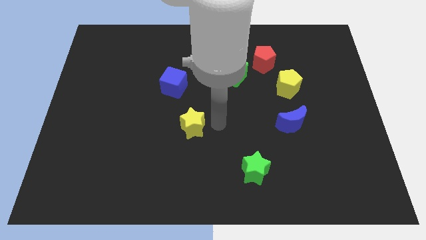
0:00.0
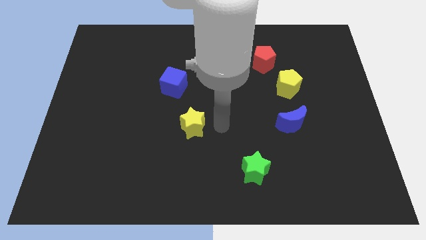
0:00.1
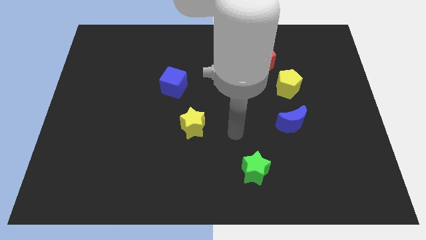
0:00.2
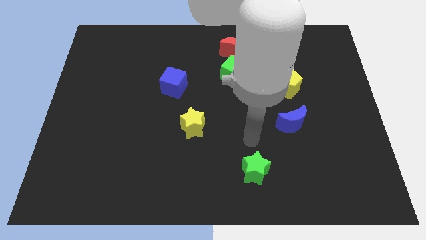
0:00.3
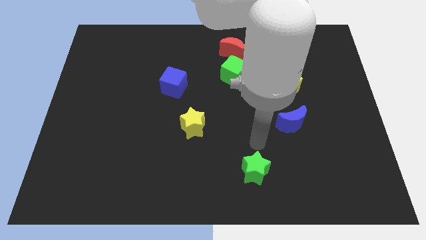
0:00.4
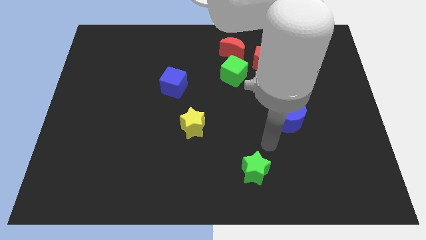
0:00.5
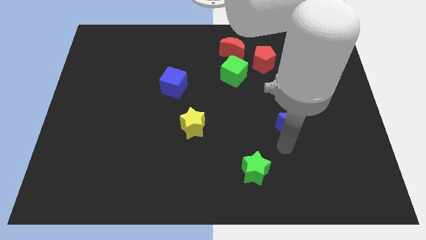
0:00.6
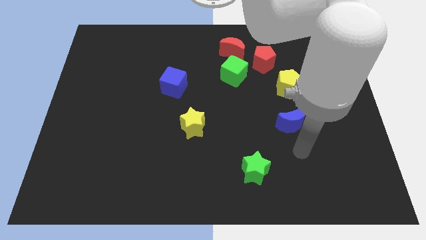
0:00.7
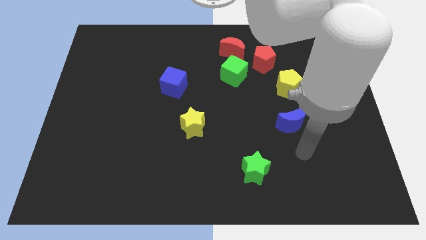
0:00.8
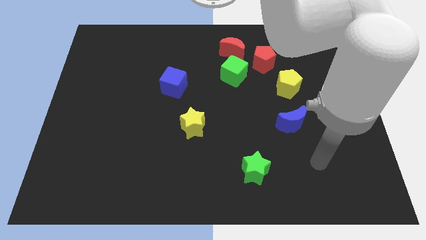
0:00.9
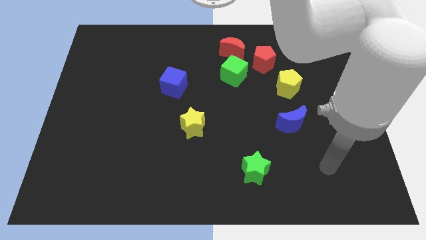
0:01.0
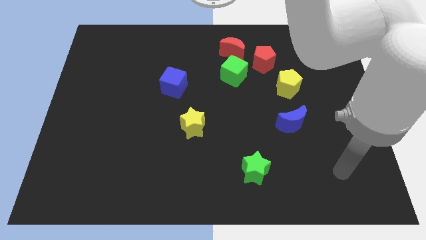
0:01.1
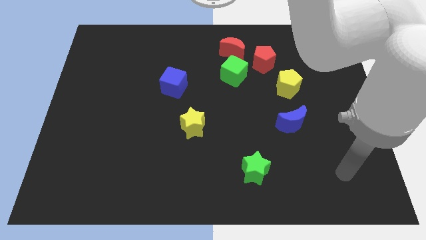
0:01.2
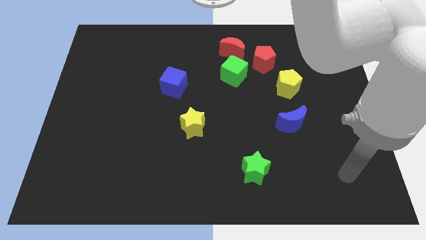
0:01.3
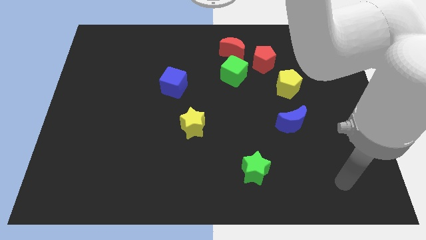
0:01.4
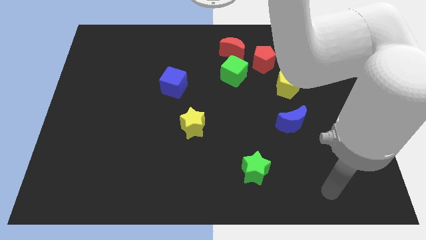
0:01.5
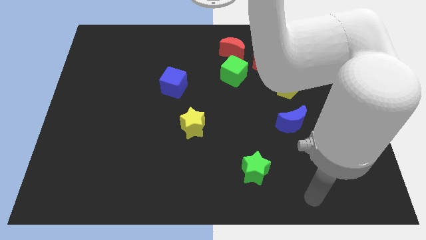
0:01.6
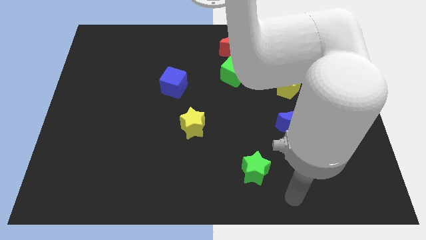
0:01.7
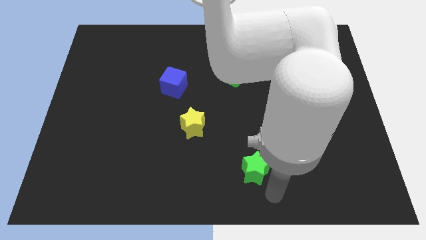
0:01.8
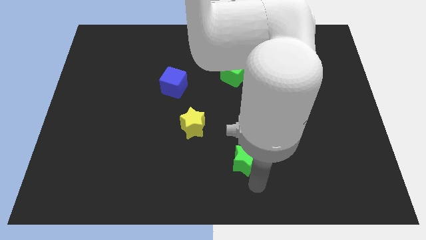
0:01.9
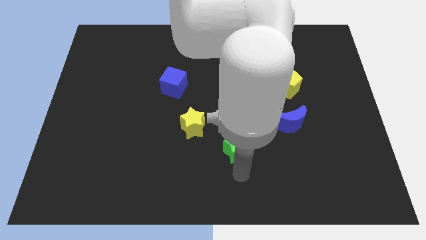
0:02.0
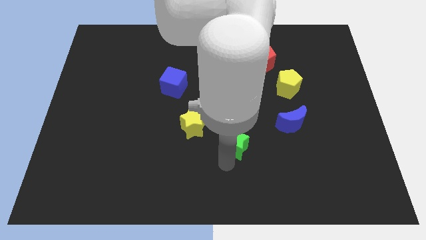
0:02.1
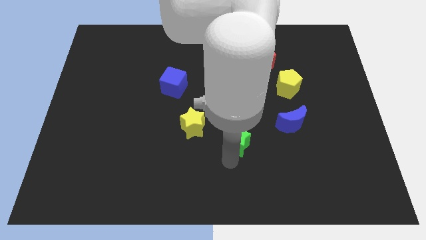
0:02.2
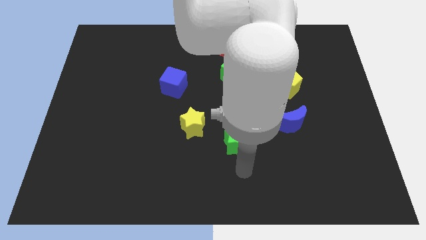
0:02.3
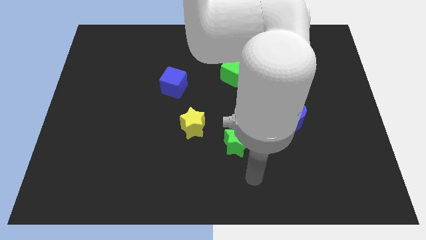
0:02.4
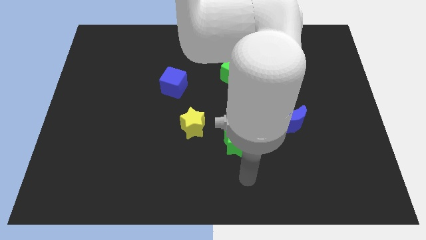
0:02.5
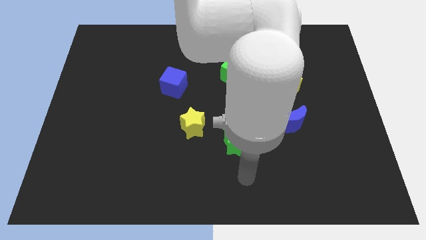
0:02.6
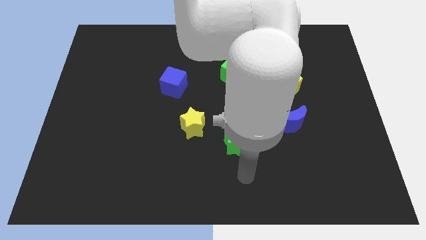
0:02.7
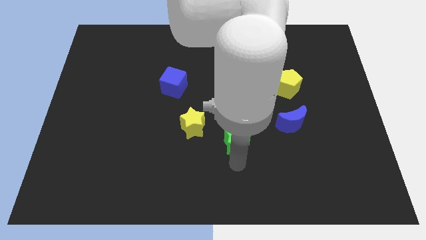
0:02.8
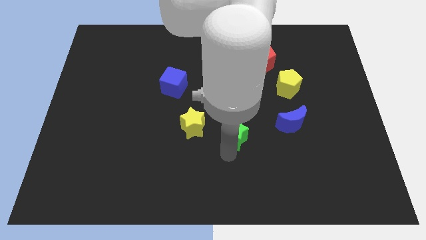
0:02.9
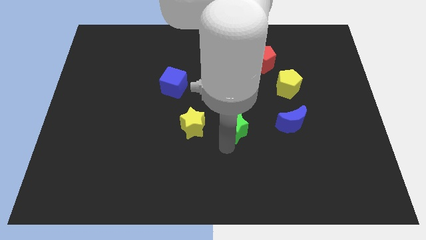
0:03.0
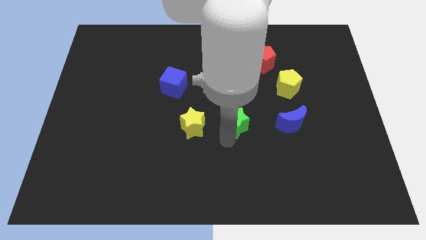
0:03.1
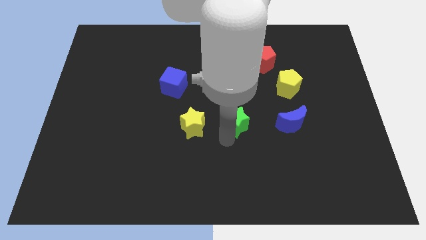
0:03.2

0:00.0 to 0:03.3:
place the green star to the right of the yellow star

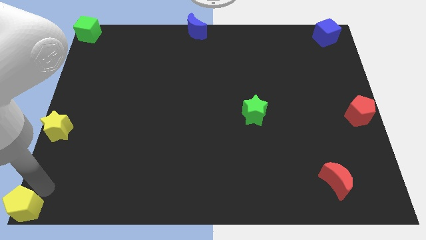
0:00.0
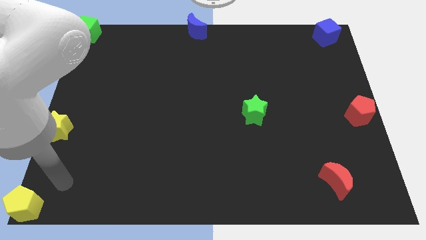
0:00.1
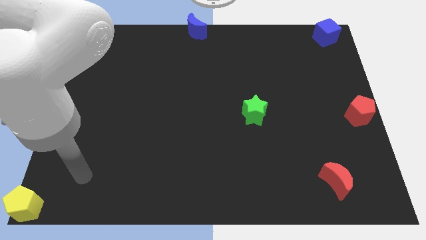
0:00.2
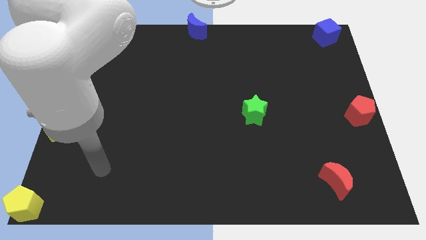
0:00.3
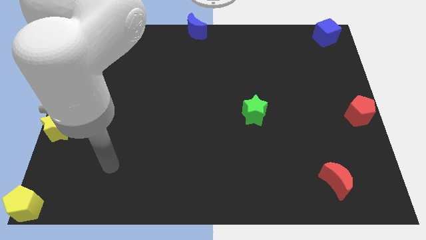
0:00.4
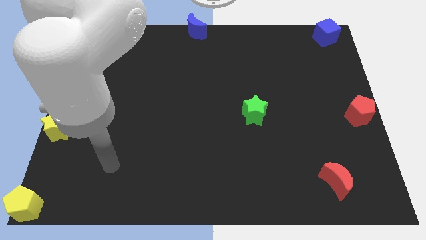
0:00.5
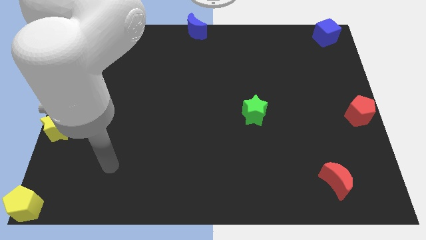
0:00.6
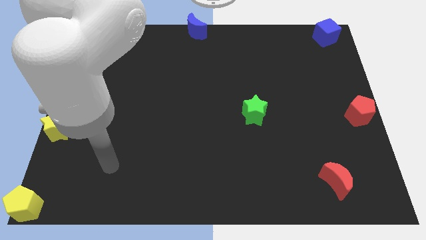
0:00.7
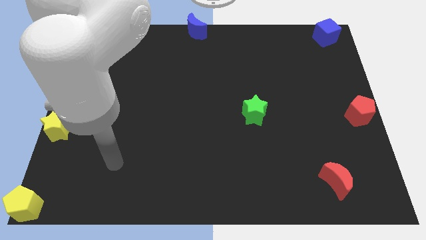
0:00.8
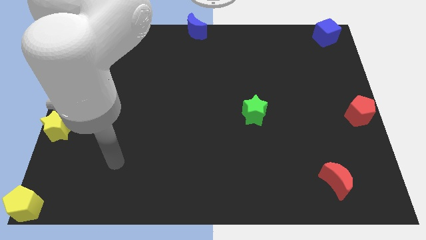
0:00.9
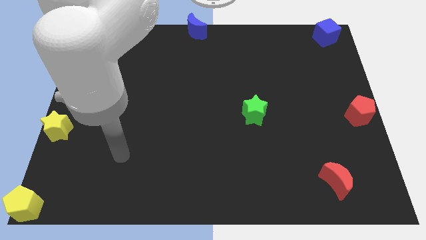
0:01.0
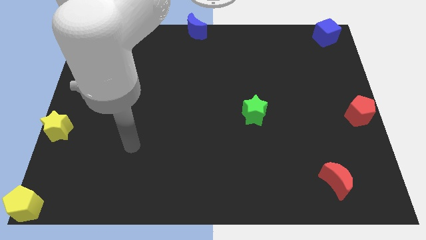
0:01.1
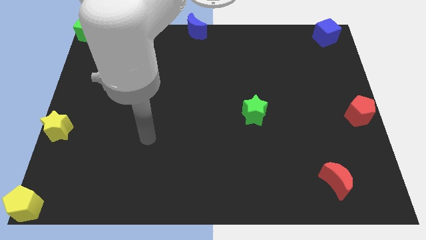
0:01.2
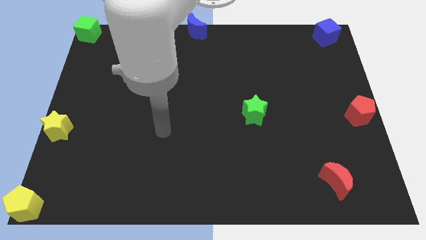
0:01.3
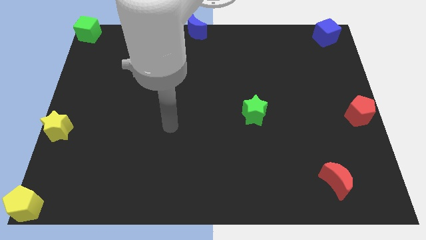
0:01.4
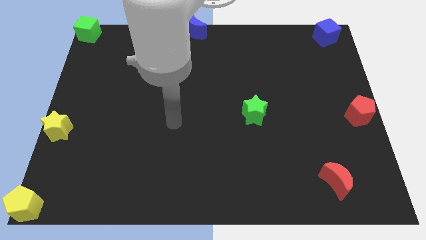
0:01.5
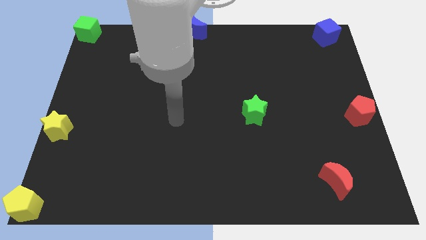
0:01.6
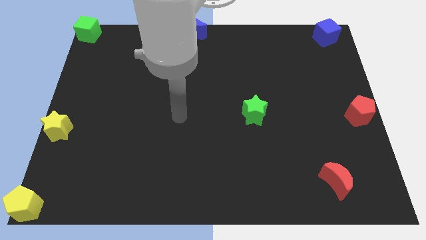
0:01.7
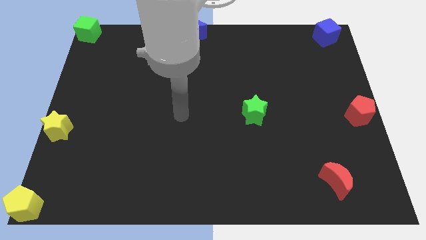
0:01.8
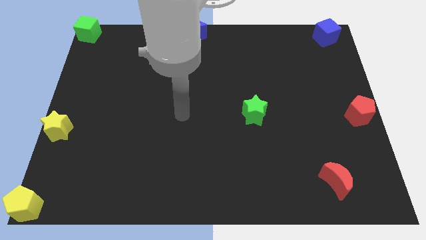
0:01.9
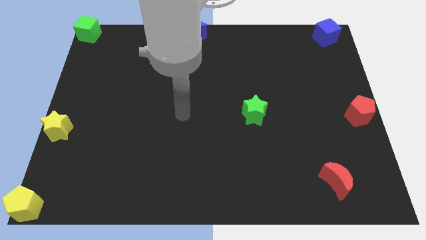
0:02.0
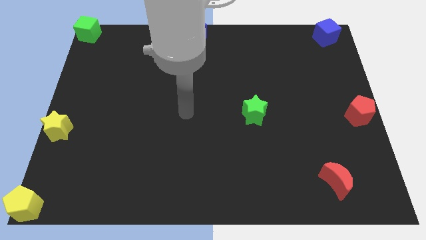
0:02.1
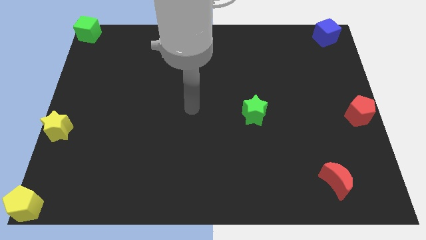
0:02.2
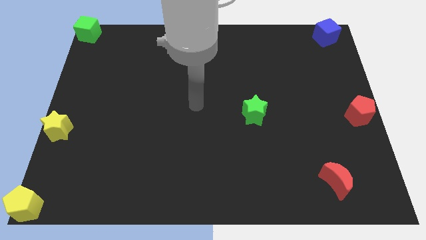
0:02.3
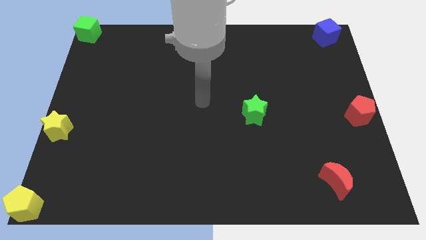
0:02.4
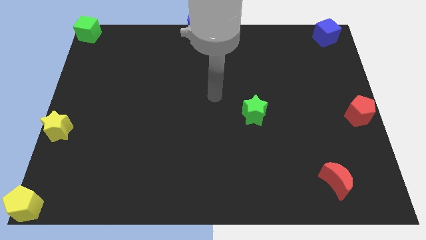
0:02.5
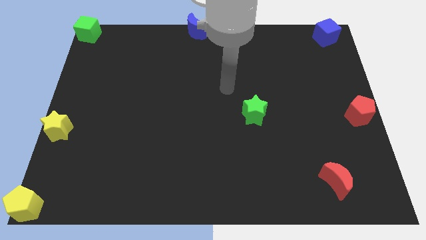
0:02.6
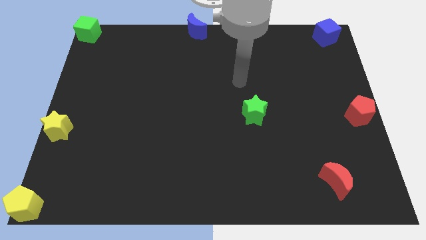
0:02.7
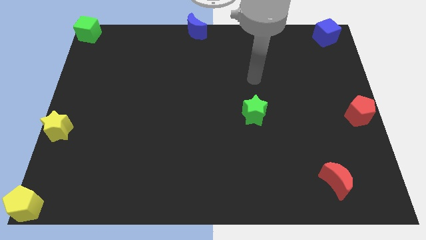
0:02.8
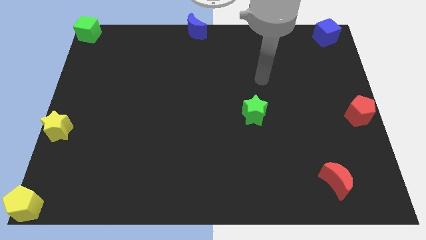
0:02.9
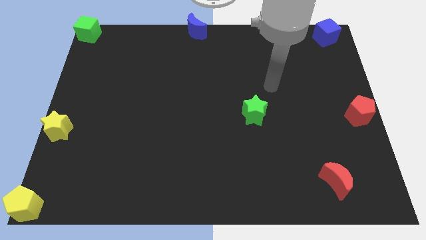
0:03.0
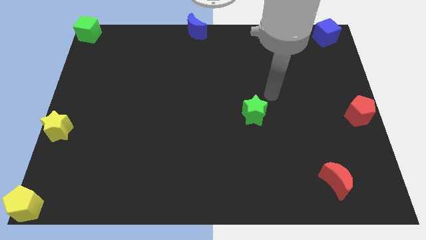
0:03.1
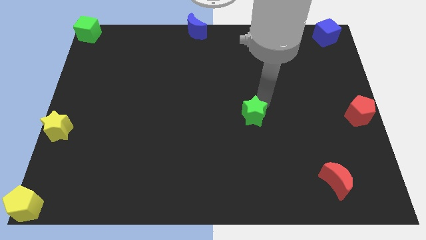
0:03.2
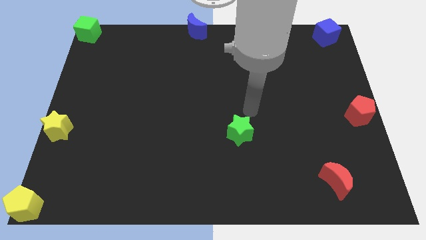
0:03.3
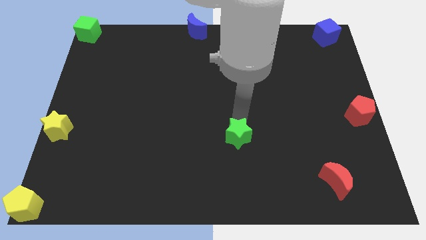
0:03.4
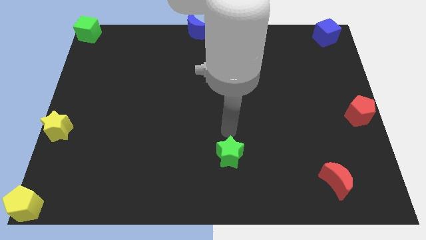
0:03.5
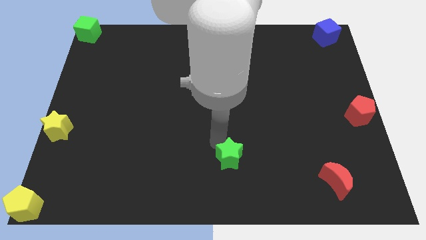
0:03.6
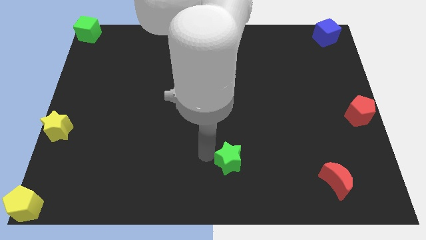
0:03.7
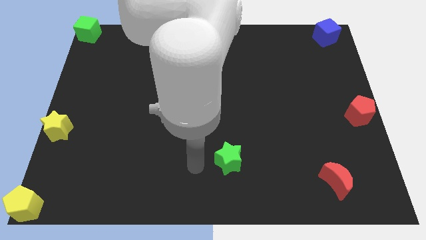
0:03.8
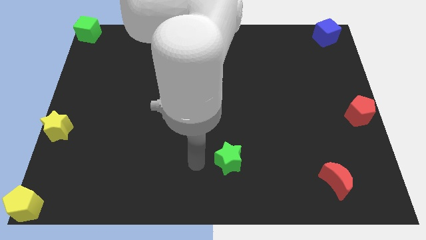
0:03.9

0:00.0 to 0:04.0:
move your arm away from yellow pentagon

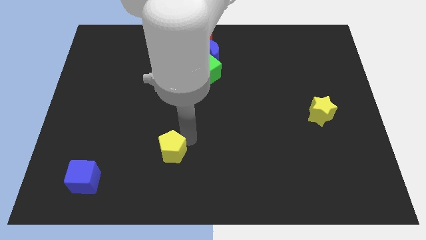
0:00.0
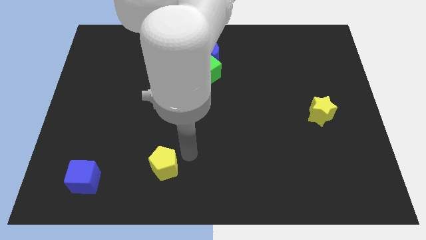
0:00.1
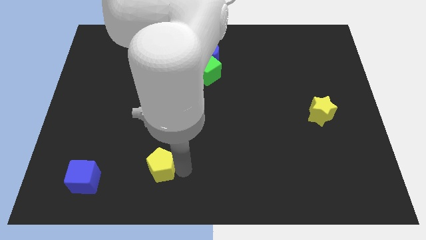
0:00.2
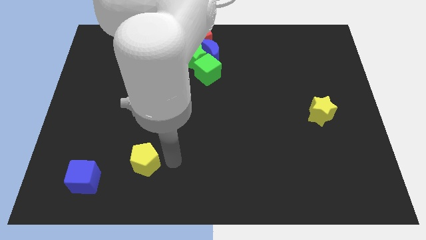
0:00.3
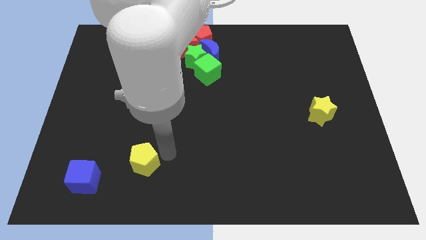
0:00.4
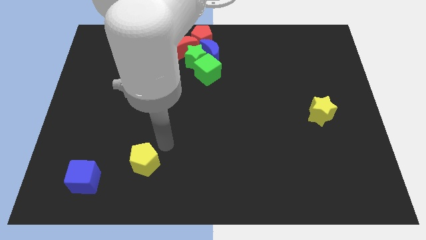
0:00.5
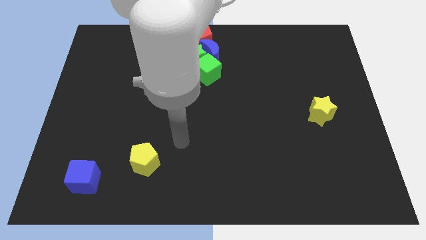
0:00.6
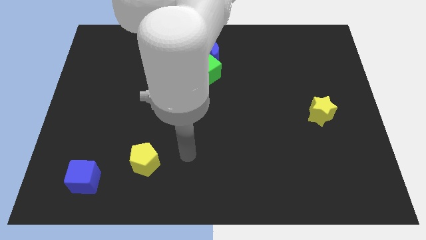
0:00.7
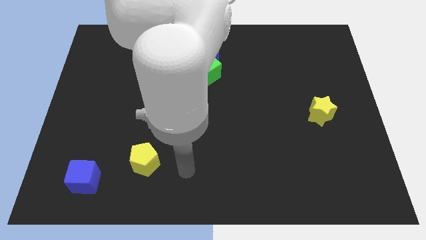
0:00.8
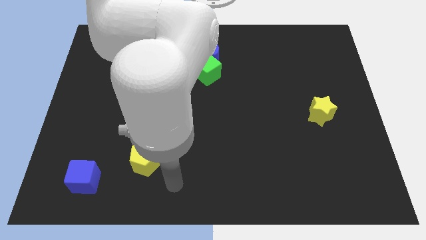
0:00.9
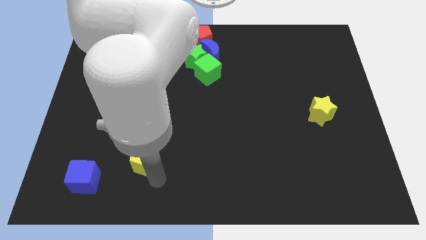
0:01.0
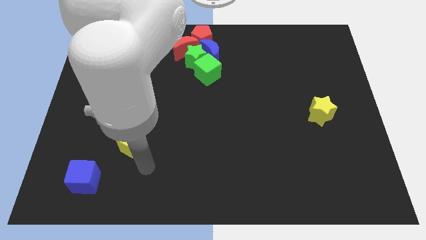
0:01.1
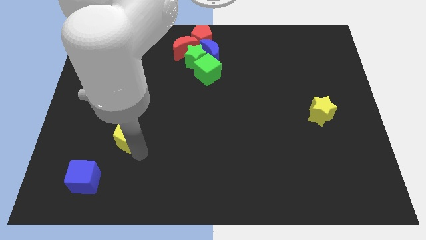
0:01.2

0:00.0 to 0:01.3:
place the yellow pentagon diagonally to the top right of the blue cube

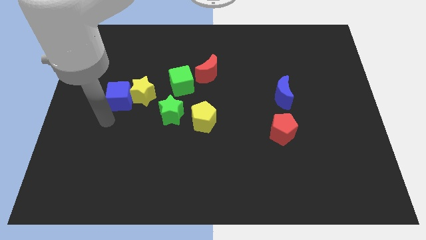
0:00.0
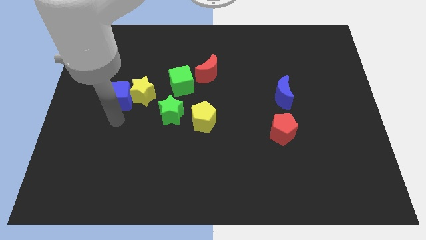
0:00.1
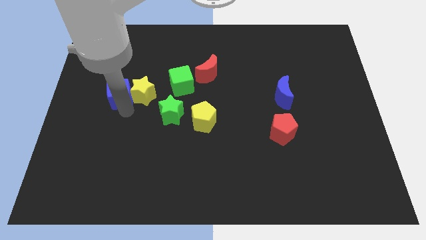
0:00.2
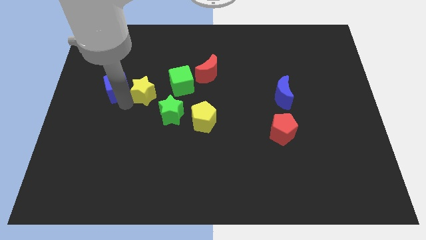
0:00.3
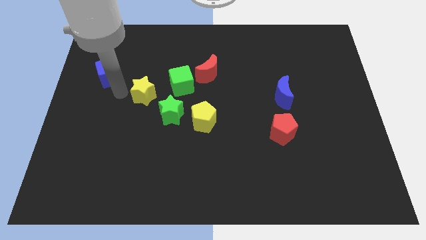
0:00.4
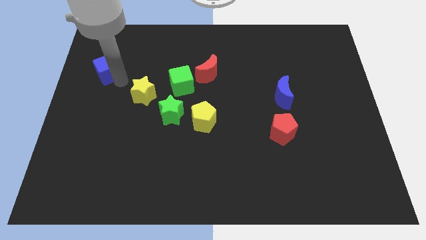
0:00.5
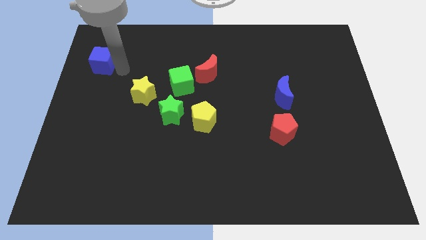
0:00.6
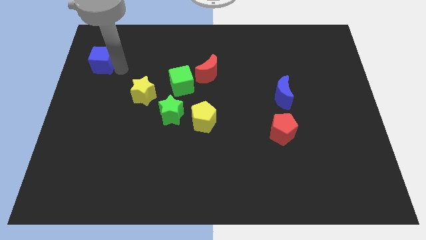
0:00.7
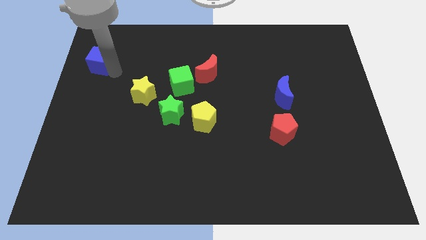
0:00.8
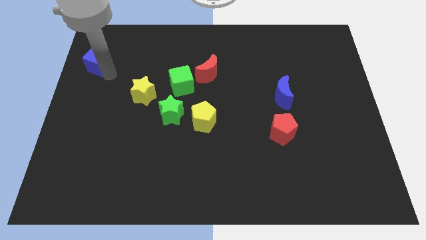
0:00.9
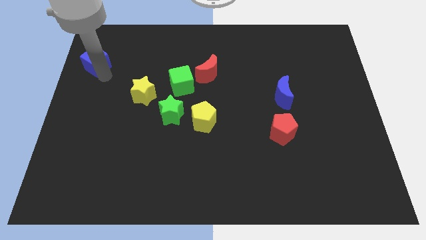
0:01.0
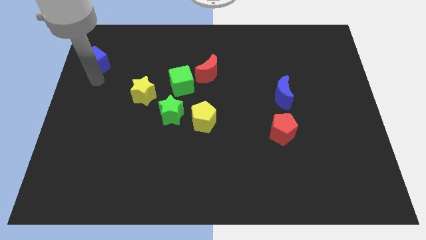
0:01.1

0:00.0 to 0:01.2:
separate the blue cube from the yellow star
